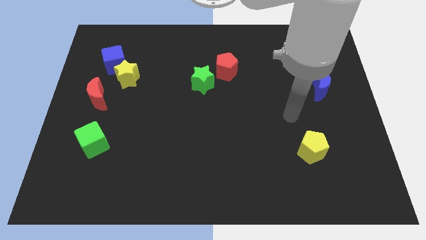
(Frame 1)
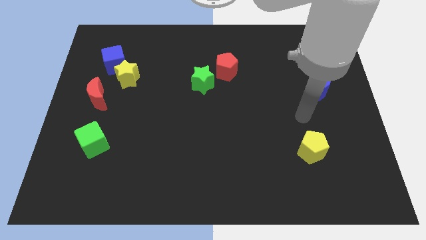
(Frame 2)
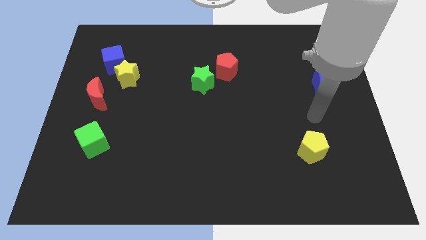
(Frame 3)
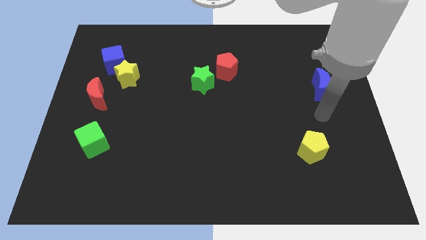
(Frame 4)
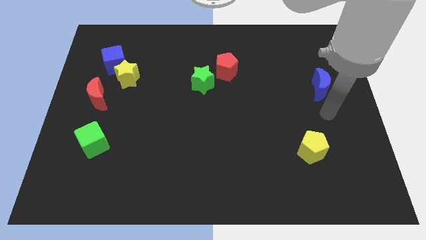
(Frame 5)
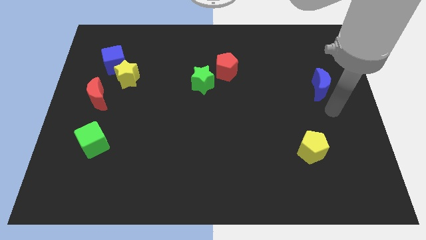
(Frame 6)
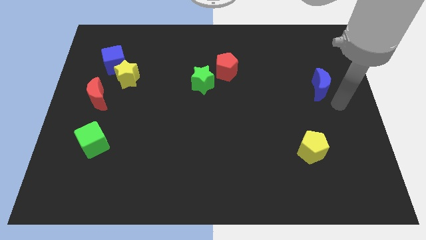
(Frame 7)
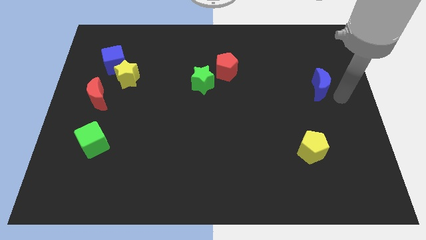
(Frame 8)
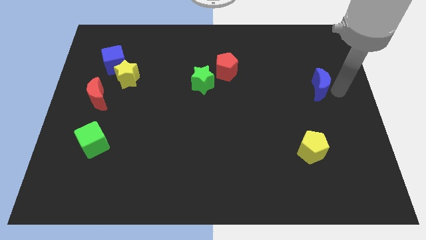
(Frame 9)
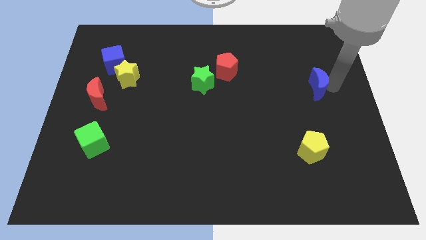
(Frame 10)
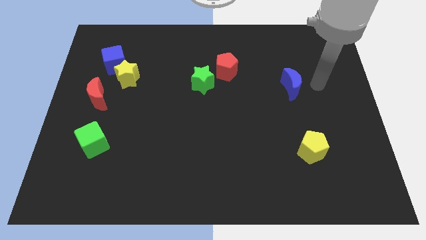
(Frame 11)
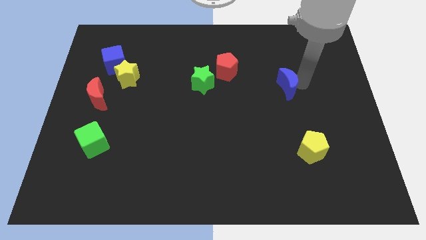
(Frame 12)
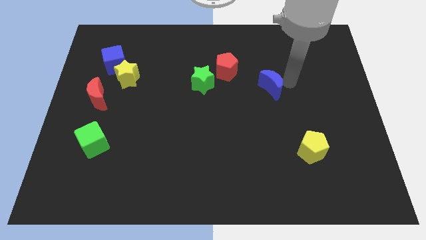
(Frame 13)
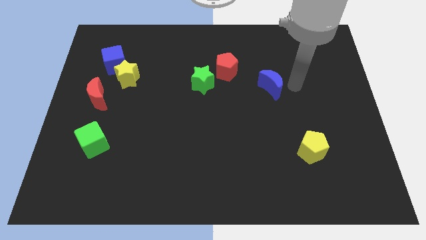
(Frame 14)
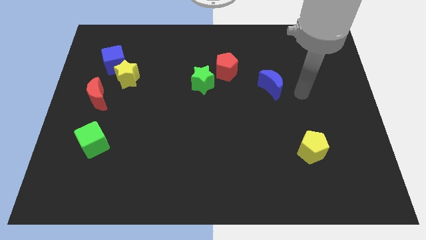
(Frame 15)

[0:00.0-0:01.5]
move the blue moon towards the red pentagon

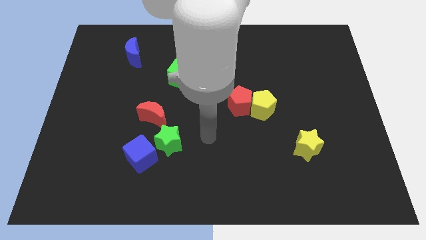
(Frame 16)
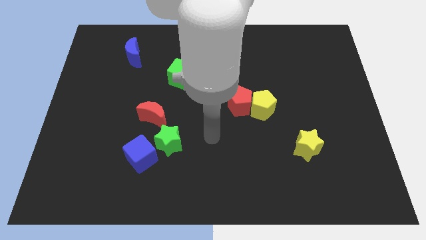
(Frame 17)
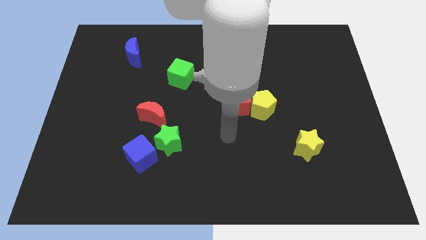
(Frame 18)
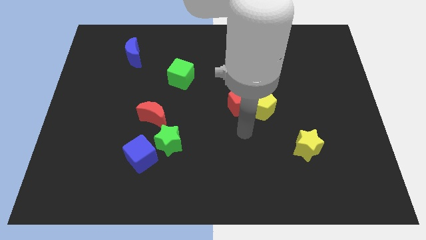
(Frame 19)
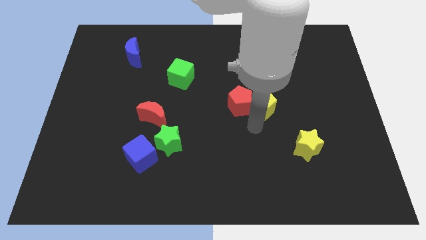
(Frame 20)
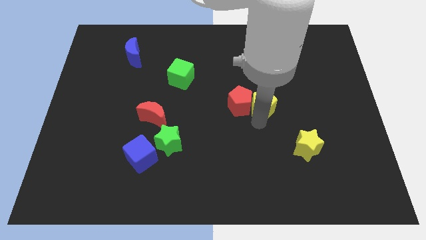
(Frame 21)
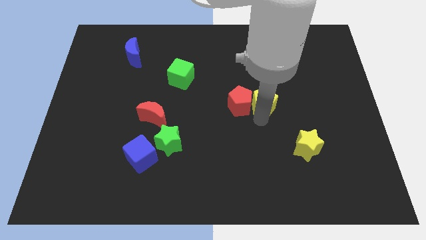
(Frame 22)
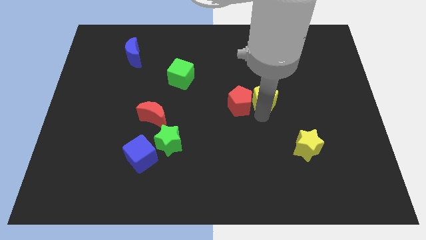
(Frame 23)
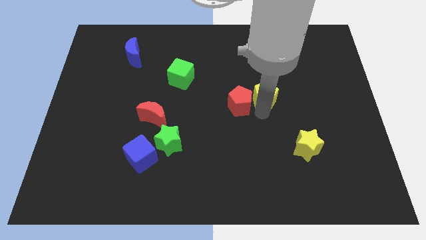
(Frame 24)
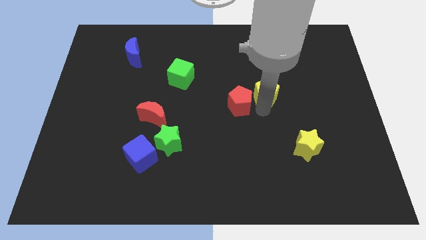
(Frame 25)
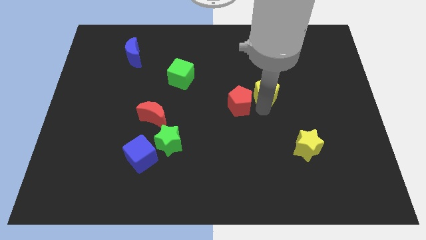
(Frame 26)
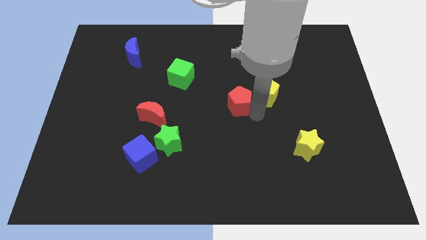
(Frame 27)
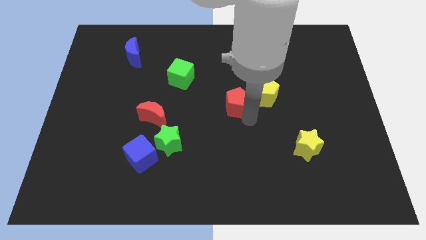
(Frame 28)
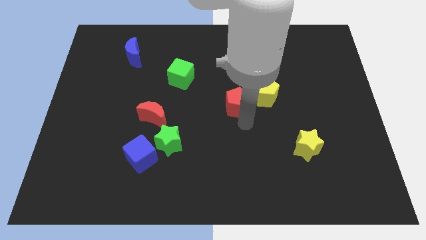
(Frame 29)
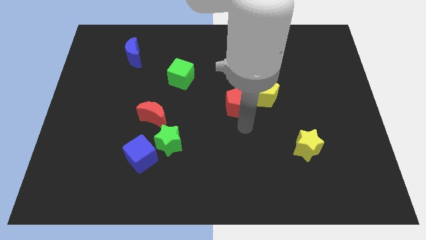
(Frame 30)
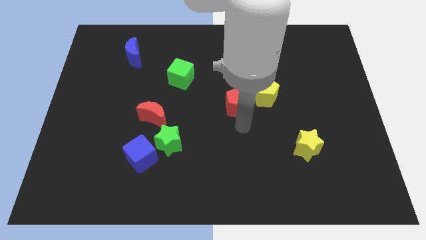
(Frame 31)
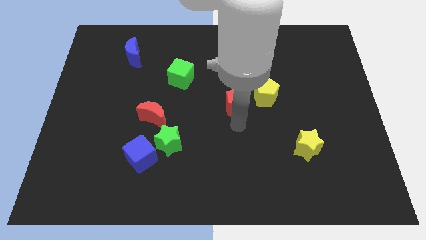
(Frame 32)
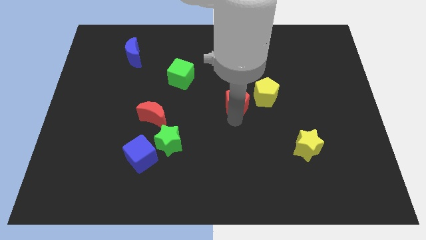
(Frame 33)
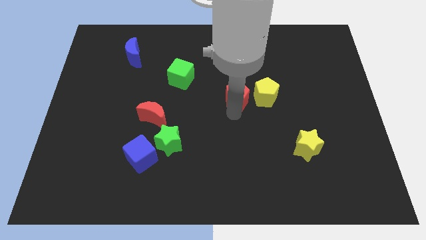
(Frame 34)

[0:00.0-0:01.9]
move the red pentagon to the top of the board

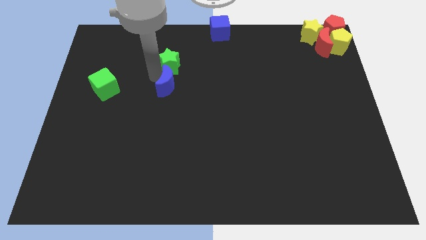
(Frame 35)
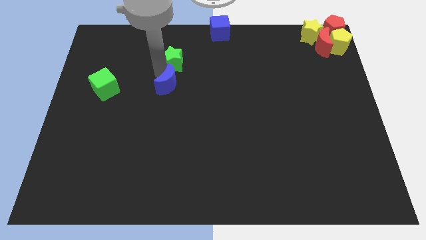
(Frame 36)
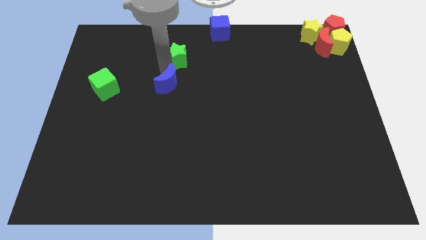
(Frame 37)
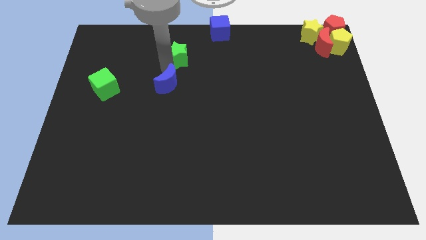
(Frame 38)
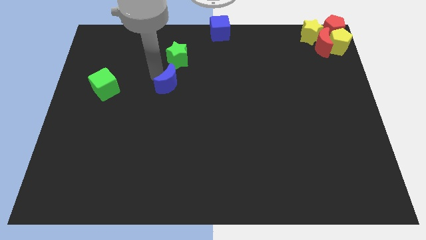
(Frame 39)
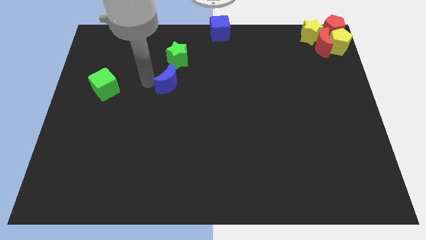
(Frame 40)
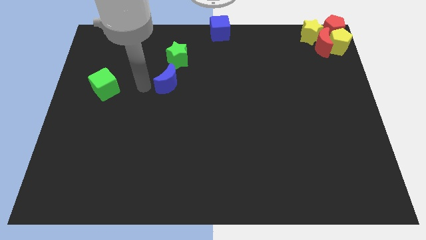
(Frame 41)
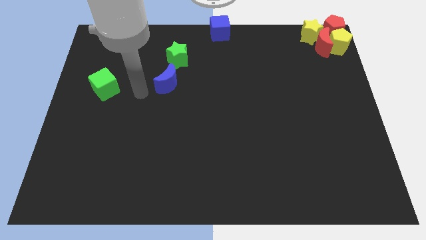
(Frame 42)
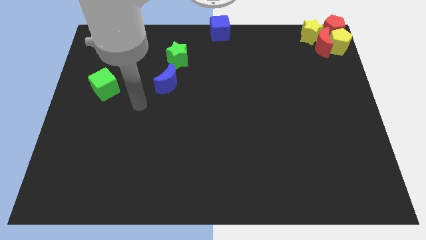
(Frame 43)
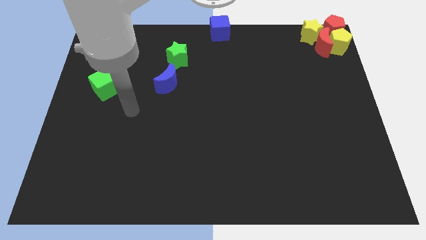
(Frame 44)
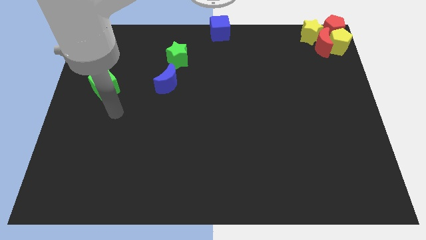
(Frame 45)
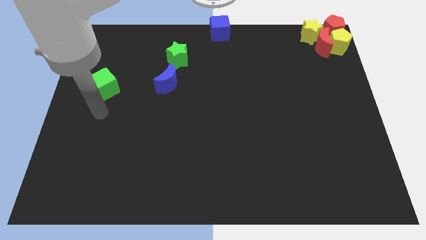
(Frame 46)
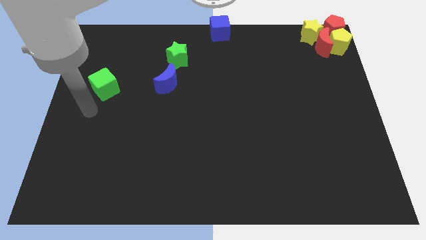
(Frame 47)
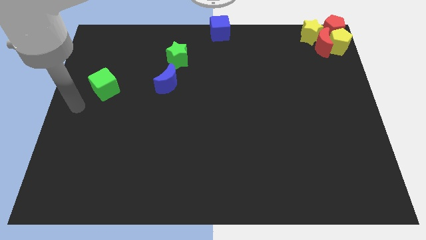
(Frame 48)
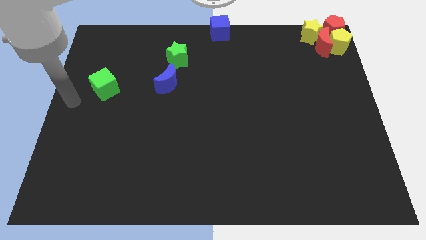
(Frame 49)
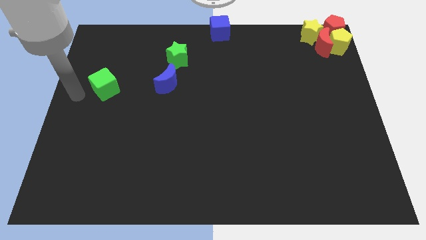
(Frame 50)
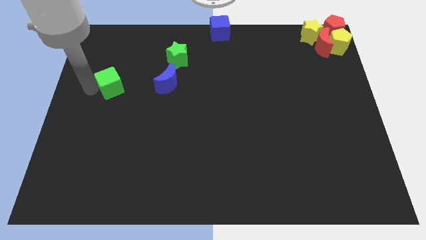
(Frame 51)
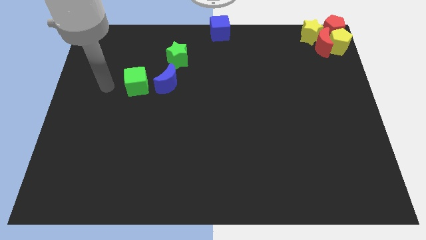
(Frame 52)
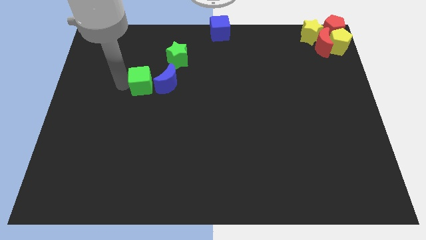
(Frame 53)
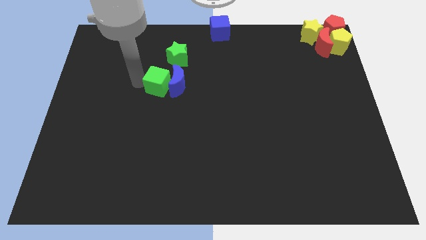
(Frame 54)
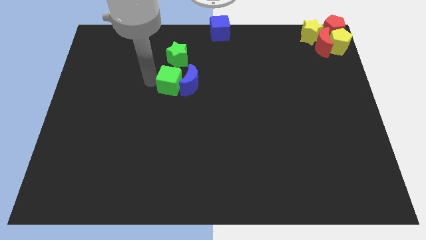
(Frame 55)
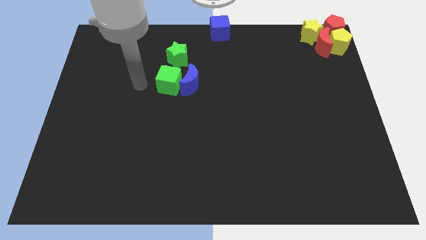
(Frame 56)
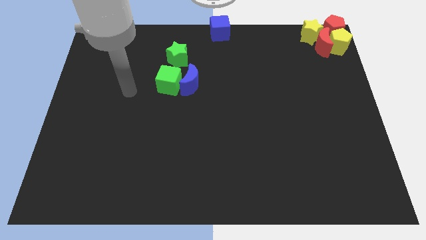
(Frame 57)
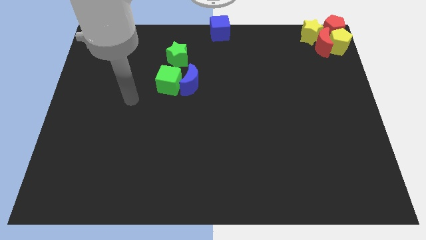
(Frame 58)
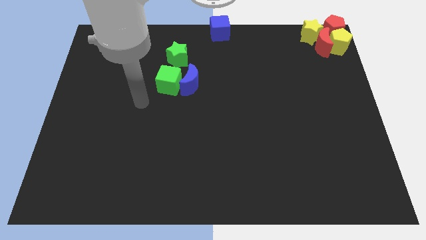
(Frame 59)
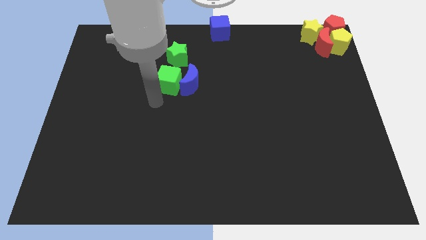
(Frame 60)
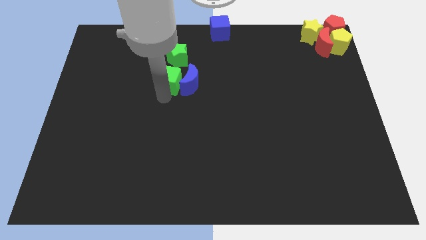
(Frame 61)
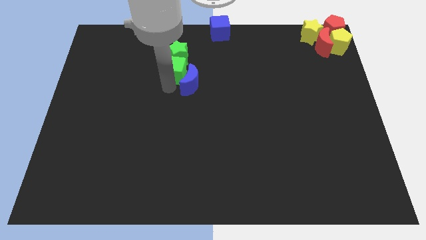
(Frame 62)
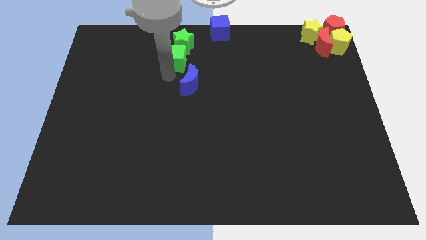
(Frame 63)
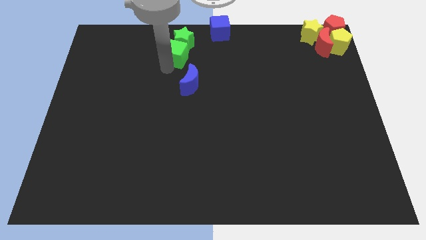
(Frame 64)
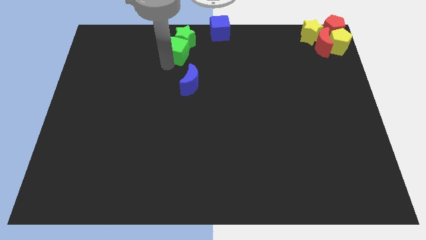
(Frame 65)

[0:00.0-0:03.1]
push the green blocks towards the left side of the blue cube

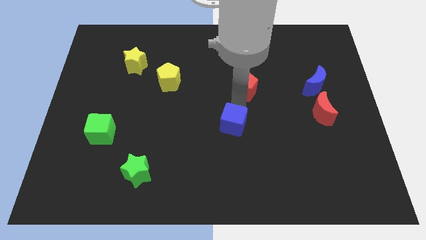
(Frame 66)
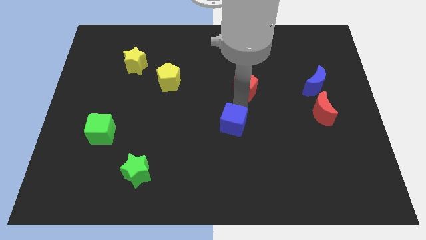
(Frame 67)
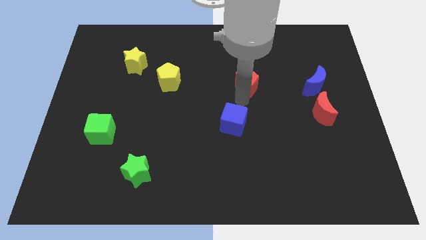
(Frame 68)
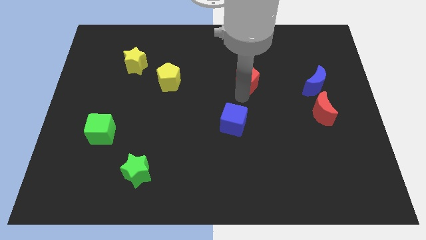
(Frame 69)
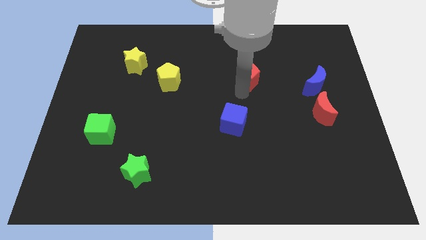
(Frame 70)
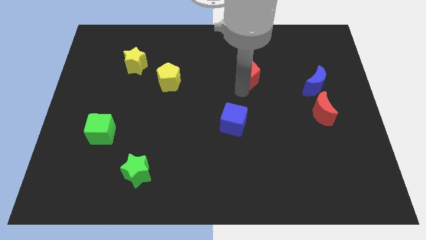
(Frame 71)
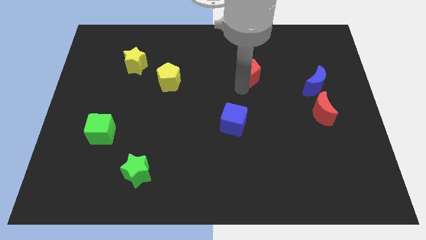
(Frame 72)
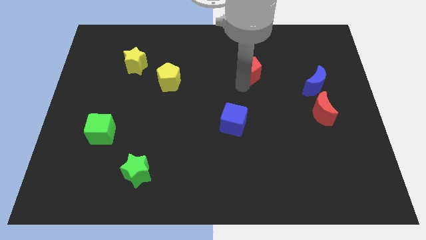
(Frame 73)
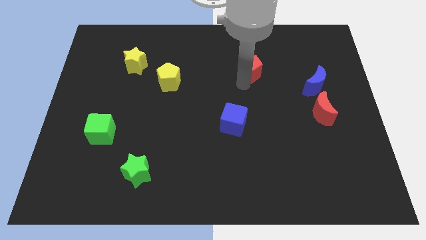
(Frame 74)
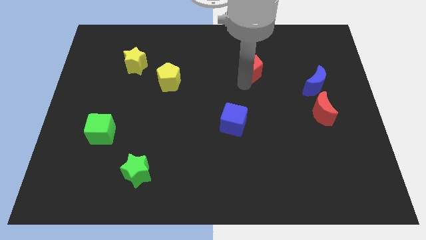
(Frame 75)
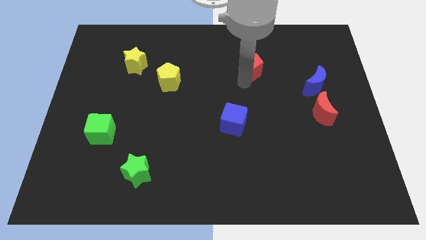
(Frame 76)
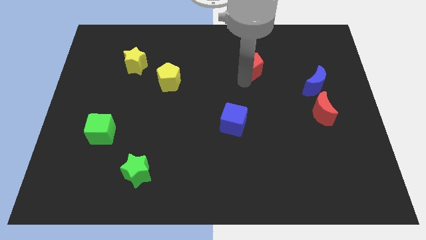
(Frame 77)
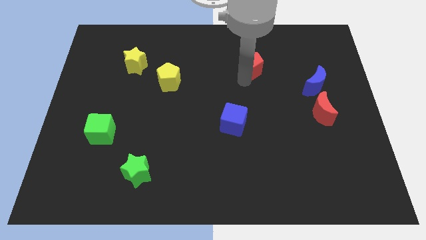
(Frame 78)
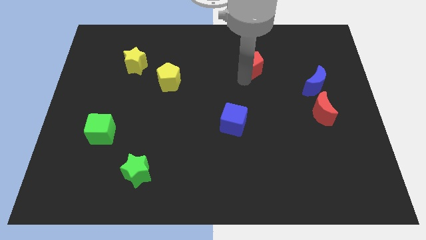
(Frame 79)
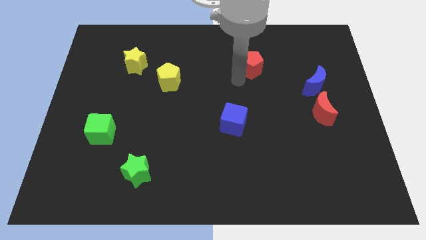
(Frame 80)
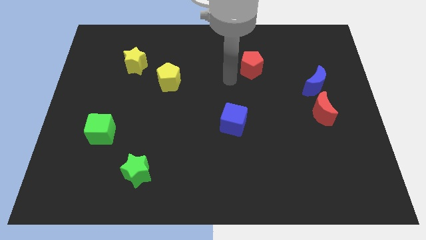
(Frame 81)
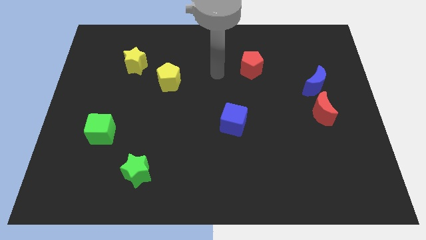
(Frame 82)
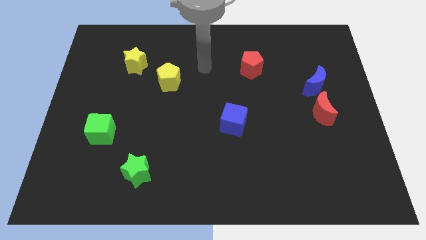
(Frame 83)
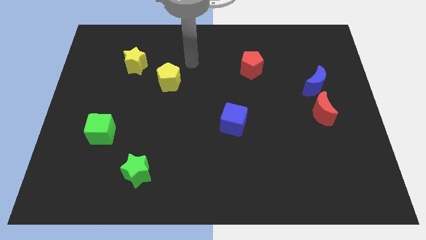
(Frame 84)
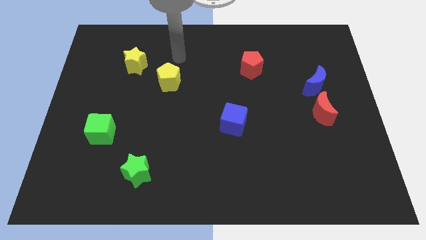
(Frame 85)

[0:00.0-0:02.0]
move the red pentagon up slightly

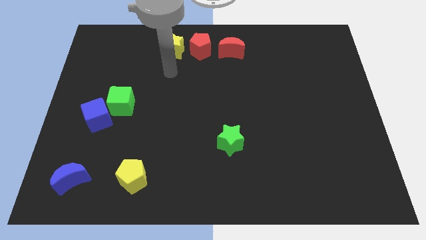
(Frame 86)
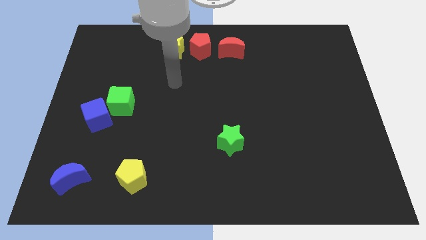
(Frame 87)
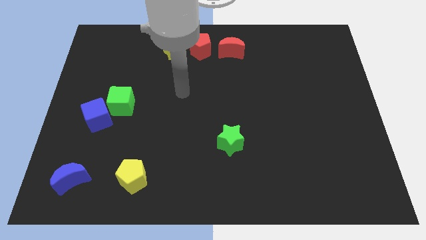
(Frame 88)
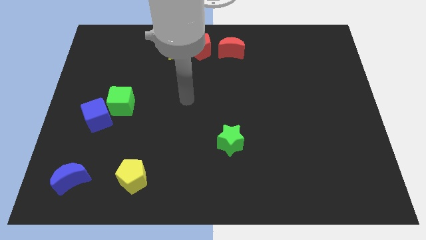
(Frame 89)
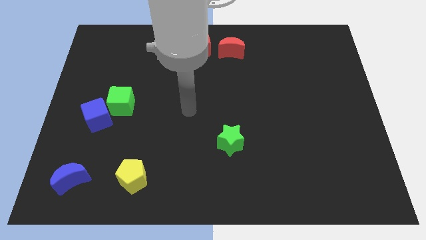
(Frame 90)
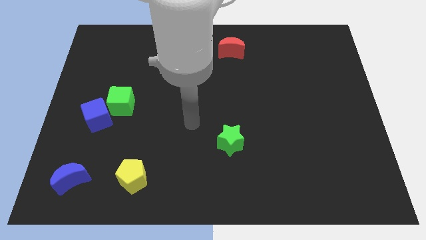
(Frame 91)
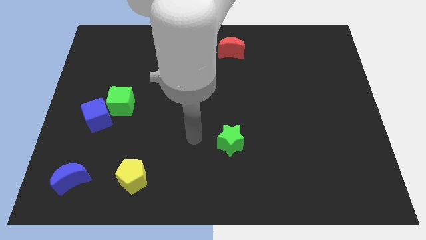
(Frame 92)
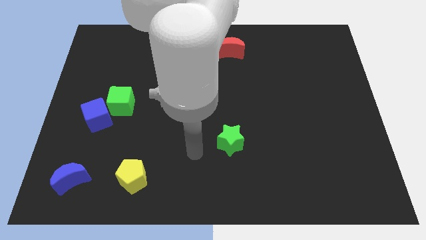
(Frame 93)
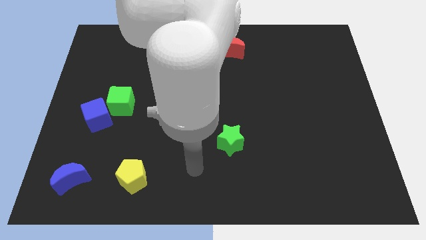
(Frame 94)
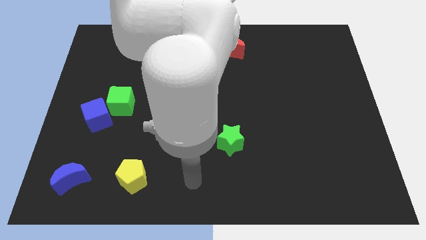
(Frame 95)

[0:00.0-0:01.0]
move the arm away from the yellow star
